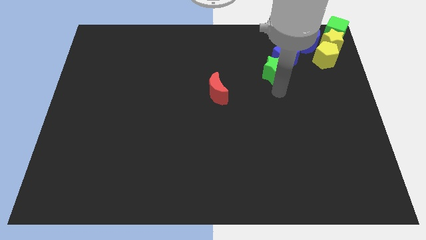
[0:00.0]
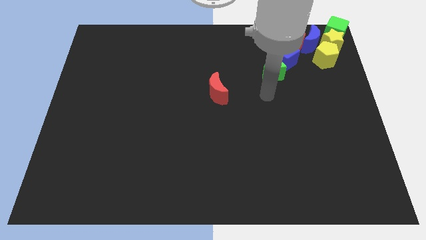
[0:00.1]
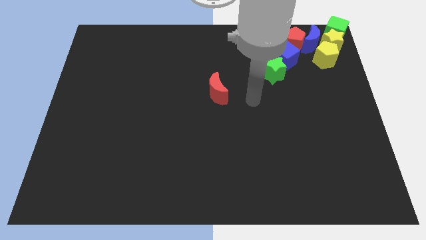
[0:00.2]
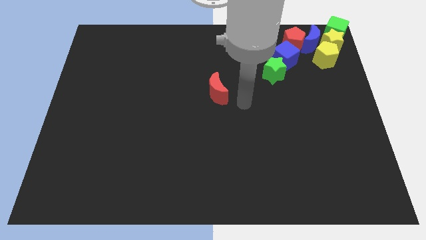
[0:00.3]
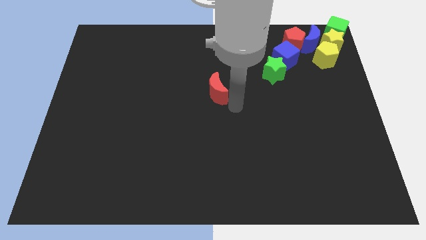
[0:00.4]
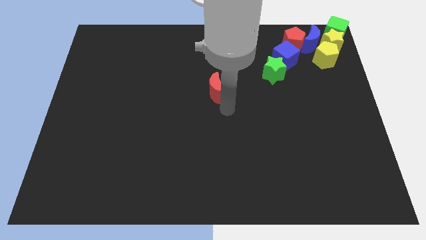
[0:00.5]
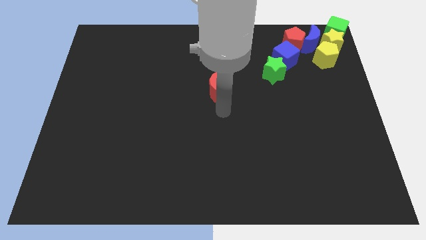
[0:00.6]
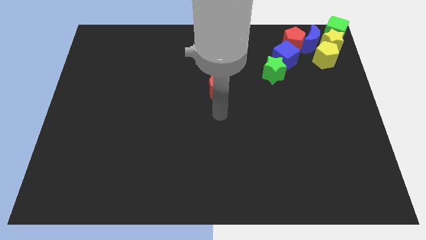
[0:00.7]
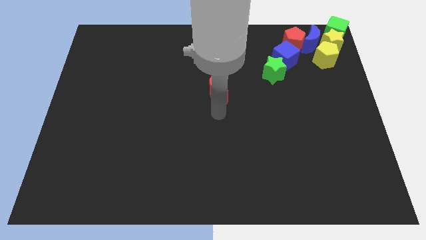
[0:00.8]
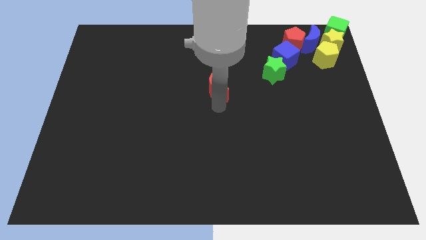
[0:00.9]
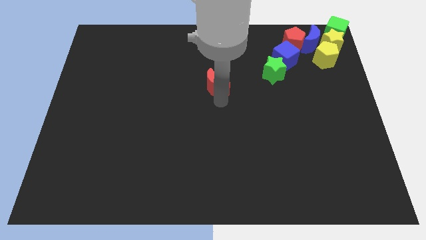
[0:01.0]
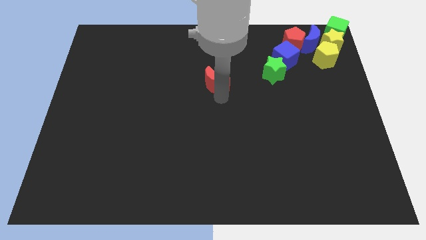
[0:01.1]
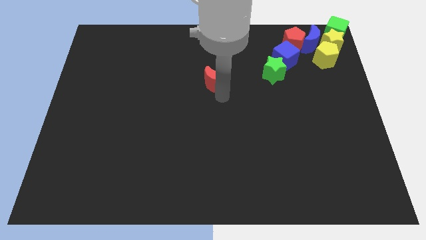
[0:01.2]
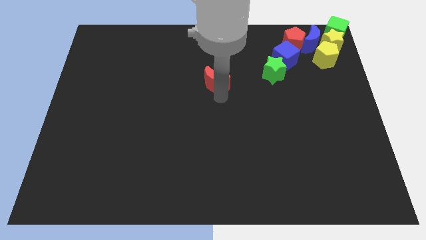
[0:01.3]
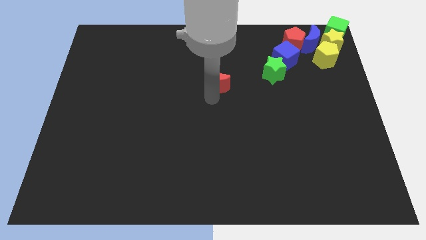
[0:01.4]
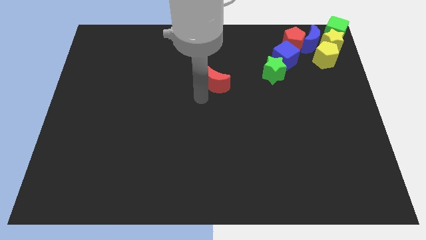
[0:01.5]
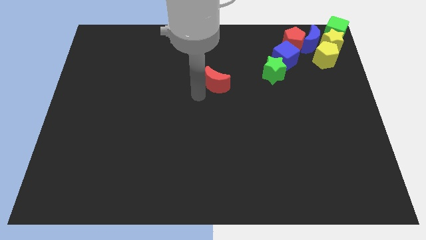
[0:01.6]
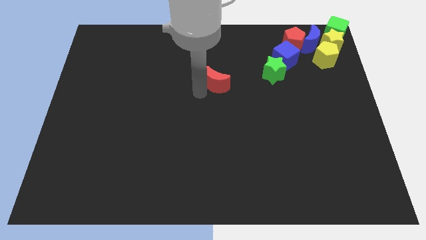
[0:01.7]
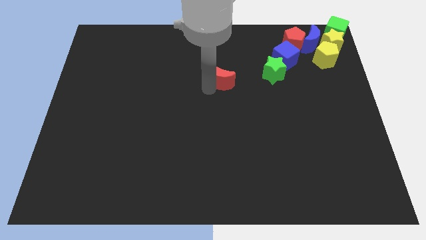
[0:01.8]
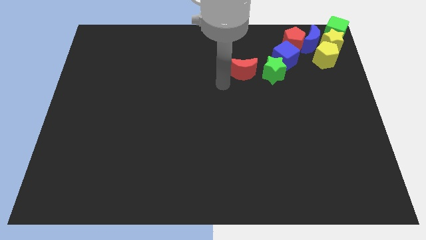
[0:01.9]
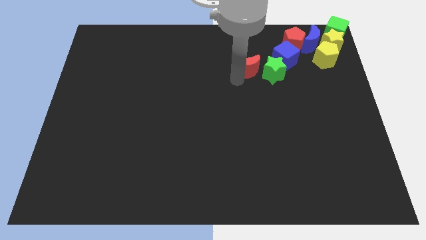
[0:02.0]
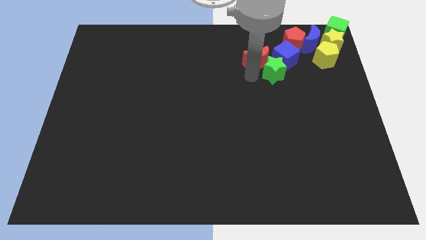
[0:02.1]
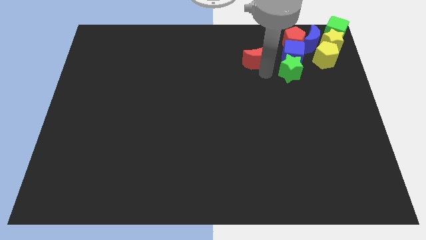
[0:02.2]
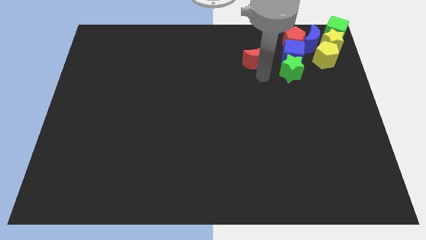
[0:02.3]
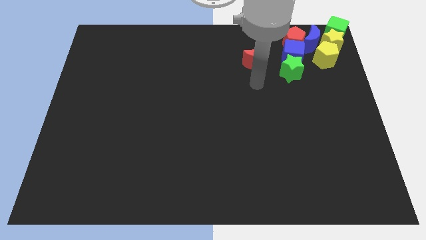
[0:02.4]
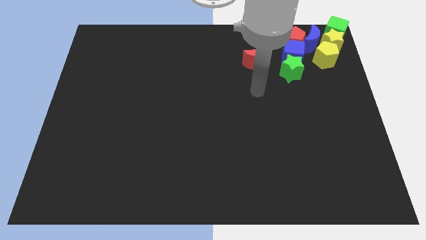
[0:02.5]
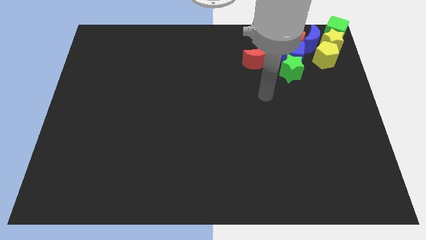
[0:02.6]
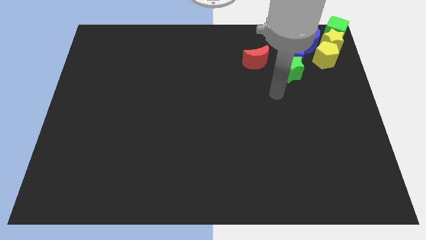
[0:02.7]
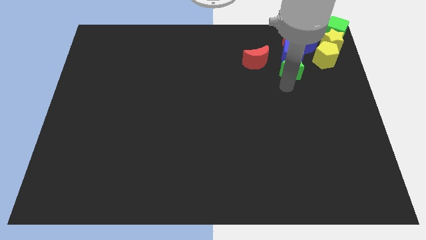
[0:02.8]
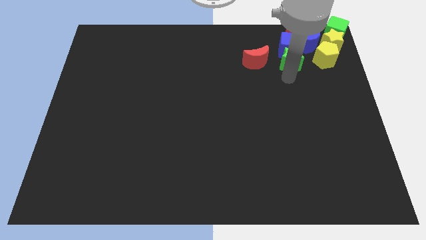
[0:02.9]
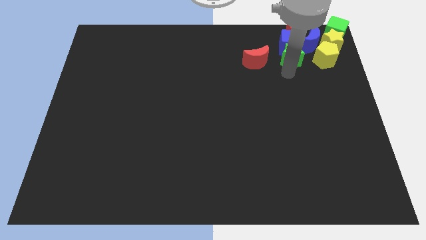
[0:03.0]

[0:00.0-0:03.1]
move red moon on the left of the blue cube and green star

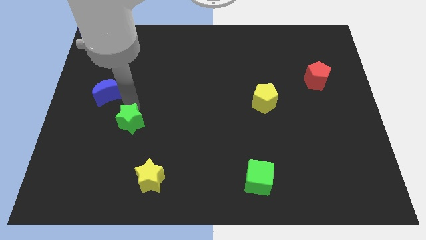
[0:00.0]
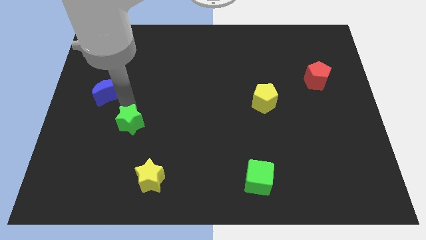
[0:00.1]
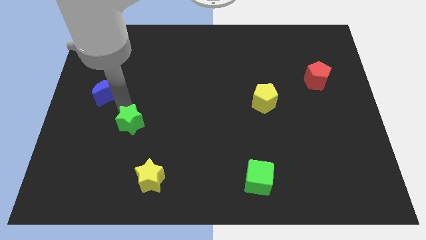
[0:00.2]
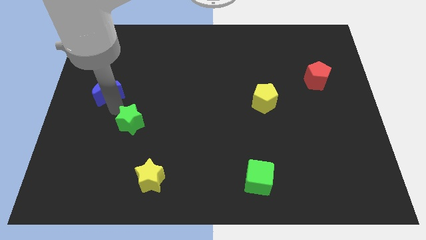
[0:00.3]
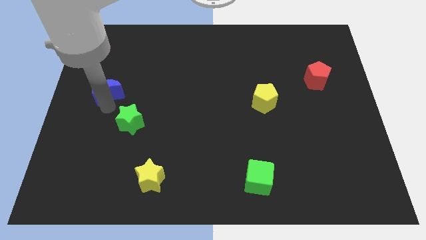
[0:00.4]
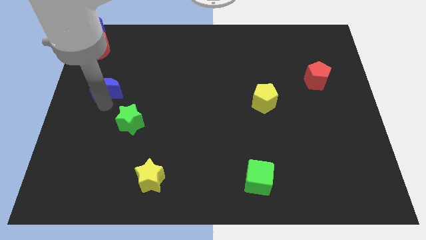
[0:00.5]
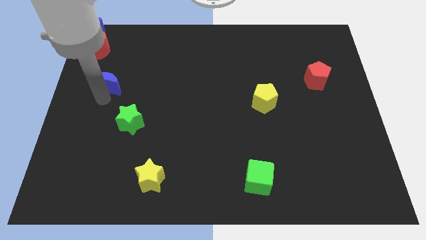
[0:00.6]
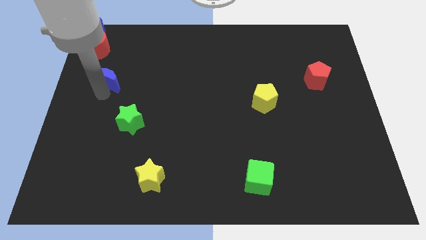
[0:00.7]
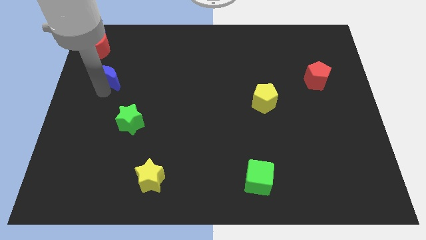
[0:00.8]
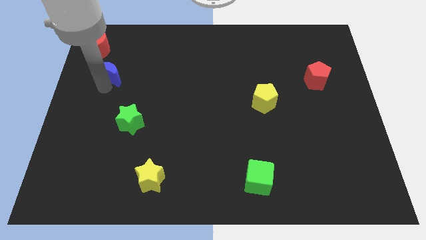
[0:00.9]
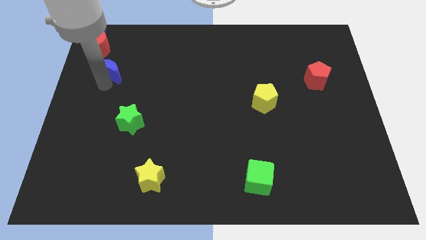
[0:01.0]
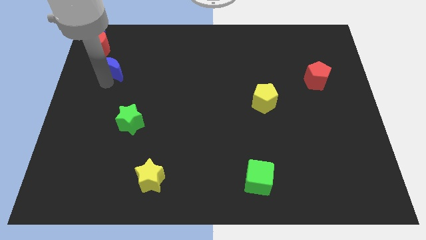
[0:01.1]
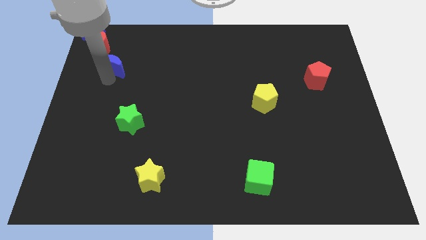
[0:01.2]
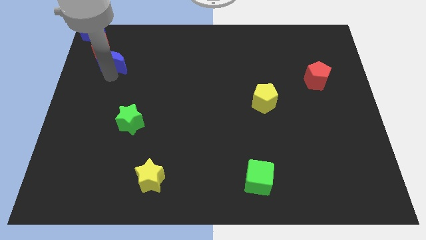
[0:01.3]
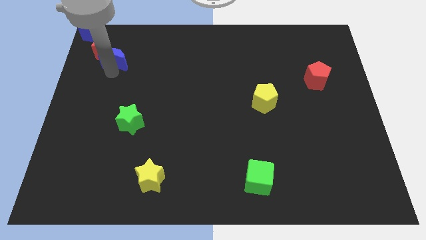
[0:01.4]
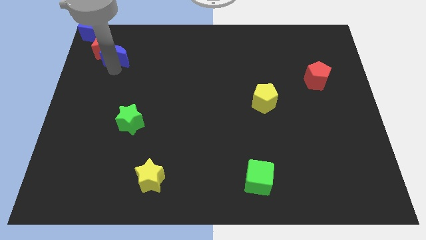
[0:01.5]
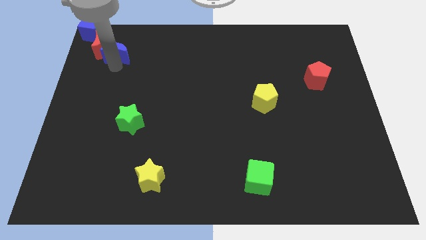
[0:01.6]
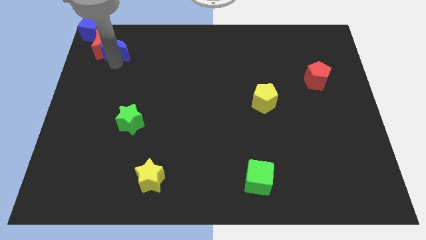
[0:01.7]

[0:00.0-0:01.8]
move the blue crescent towards the red moon block

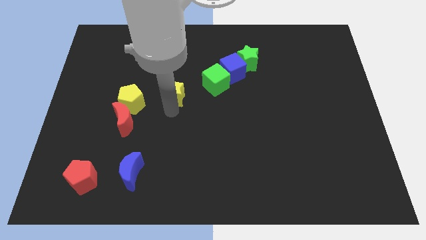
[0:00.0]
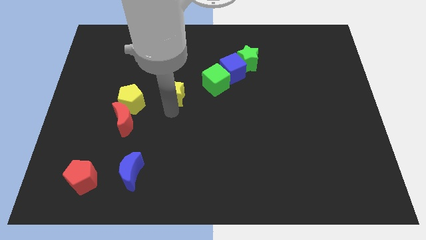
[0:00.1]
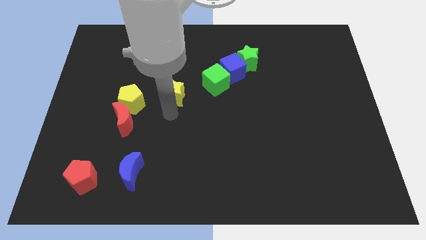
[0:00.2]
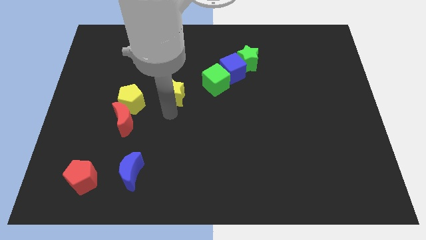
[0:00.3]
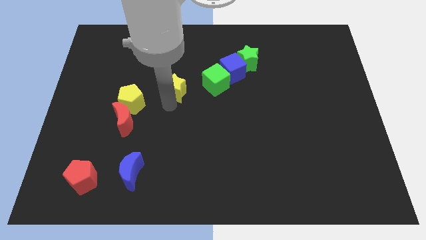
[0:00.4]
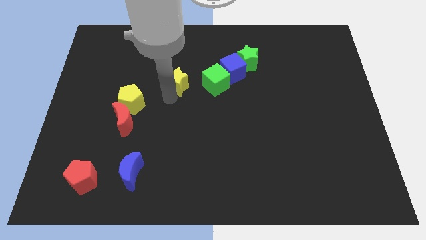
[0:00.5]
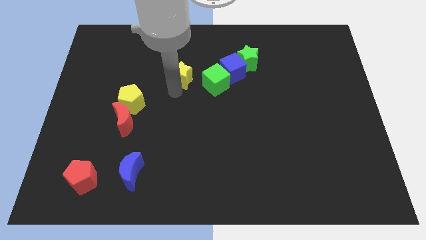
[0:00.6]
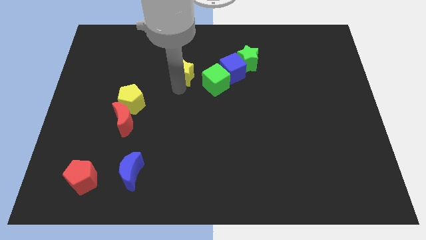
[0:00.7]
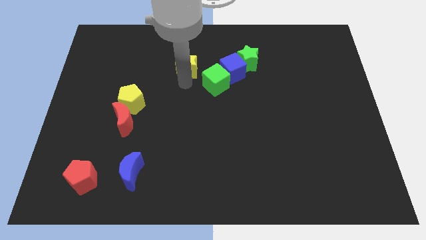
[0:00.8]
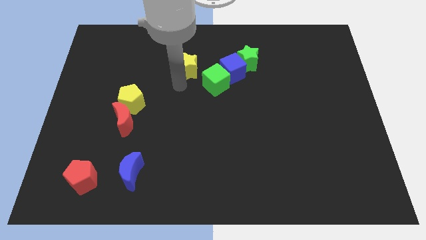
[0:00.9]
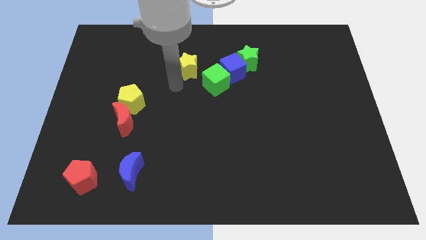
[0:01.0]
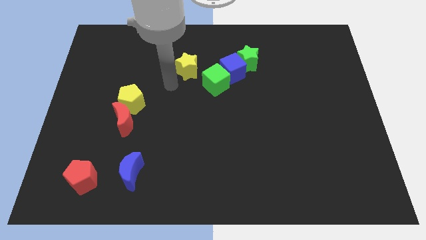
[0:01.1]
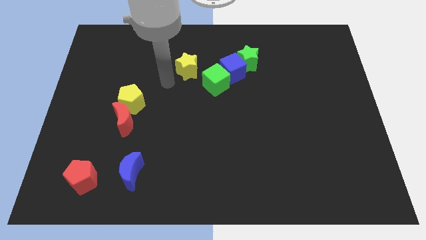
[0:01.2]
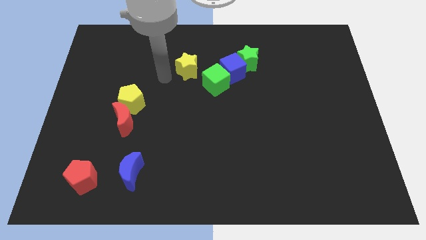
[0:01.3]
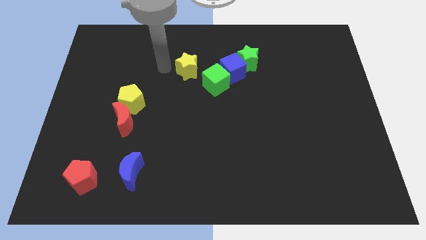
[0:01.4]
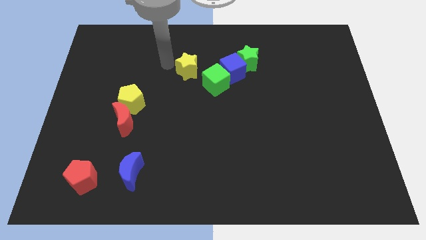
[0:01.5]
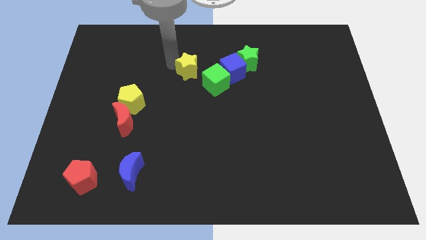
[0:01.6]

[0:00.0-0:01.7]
place the yellow star to the top left of the green cube

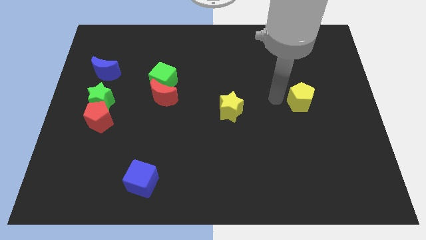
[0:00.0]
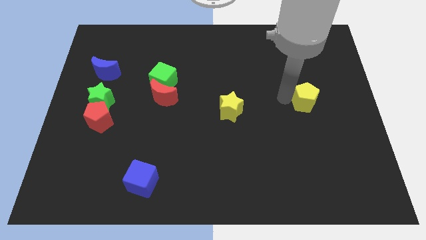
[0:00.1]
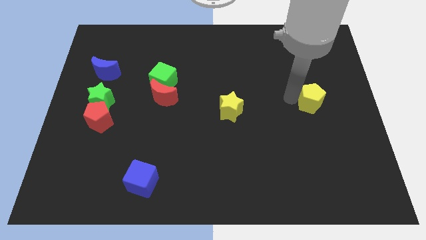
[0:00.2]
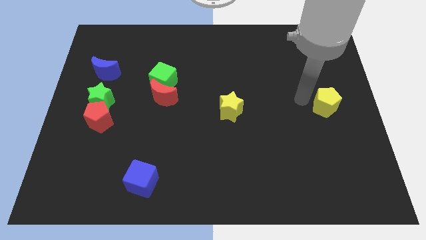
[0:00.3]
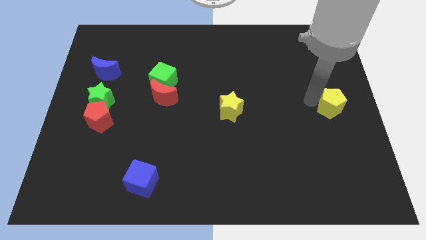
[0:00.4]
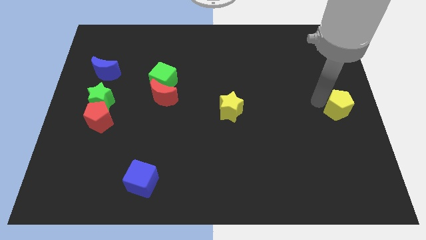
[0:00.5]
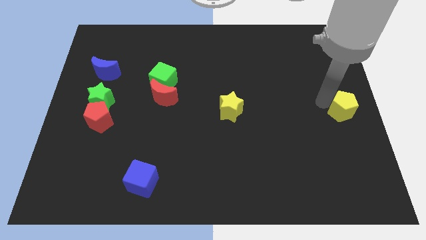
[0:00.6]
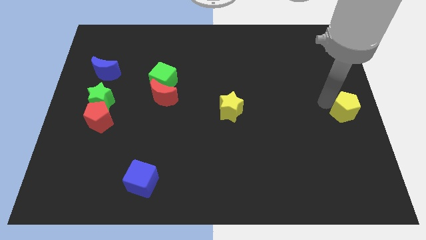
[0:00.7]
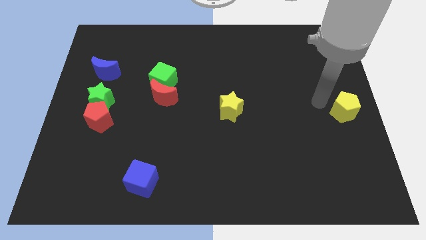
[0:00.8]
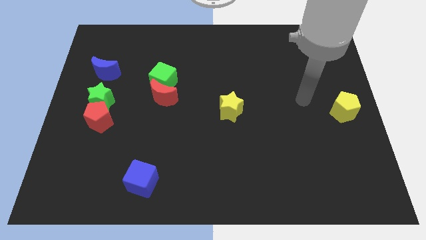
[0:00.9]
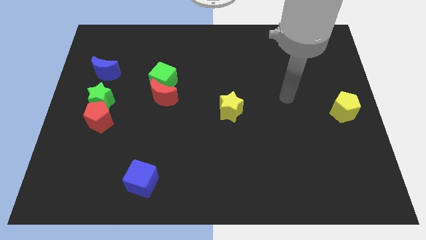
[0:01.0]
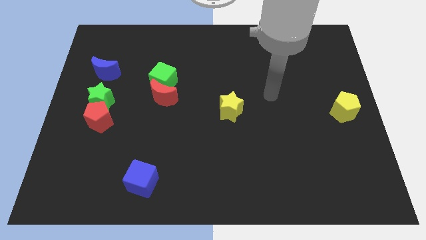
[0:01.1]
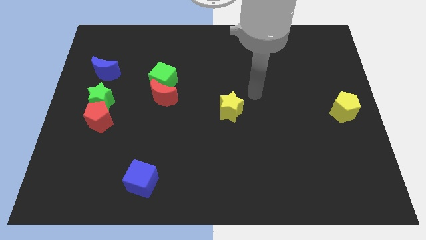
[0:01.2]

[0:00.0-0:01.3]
push the yellow pentagon to the center right of the board

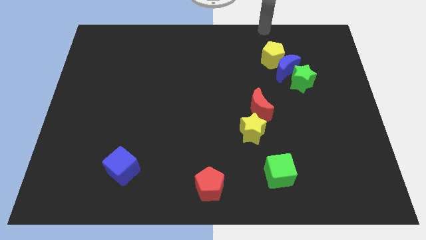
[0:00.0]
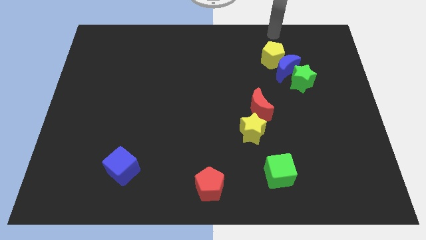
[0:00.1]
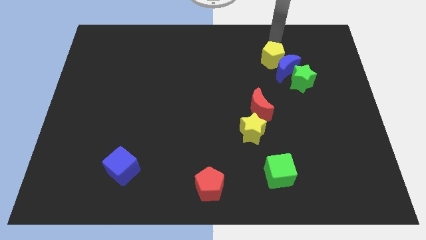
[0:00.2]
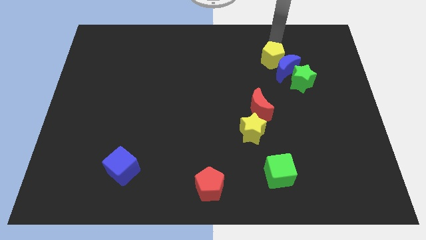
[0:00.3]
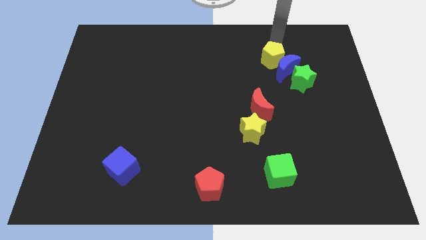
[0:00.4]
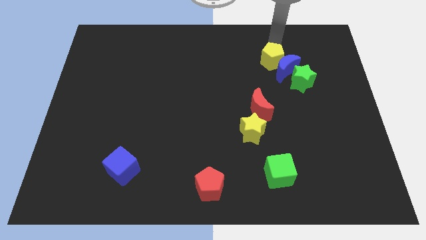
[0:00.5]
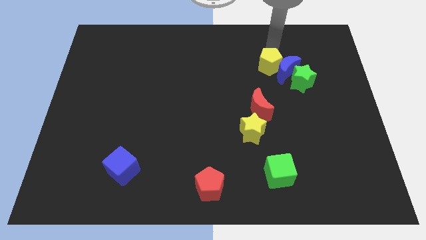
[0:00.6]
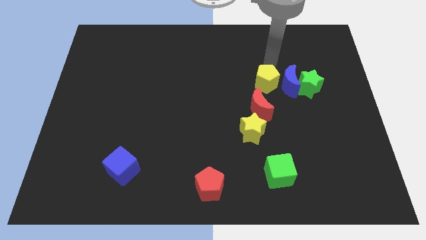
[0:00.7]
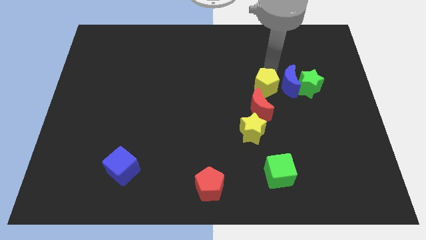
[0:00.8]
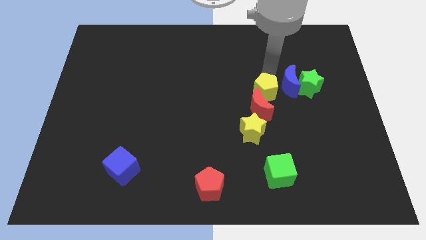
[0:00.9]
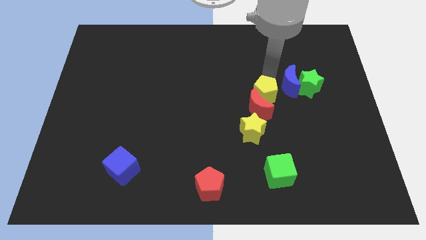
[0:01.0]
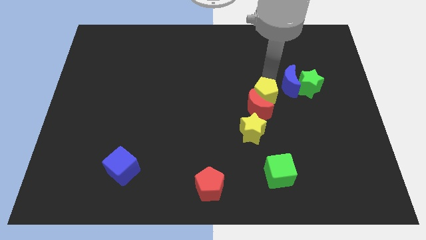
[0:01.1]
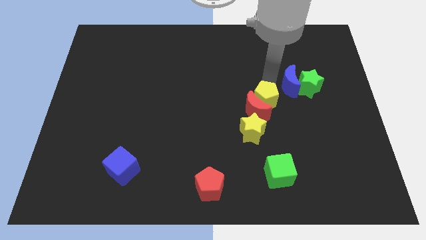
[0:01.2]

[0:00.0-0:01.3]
push the yellow pentagon into the red moon
